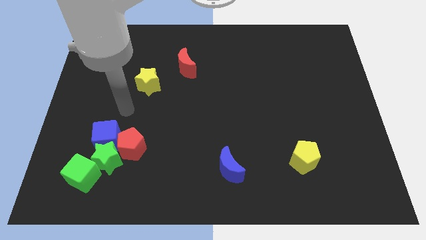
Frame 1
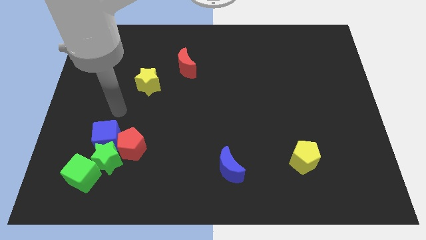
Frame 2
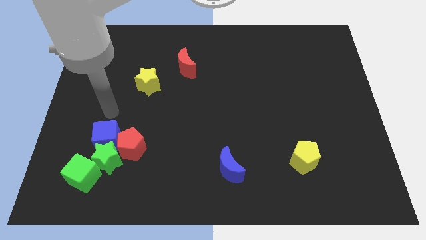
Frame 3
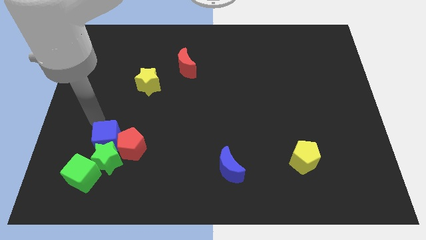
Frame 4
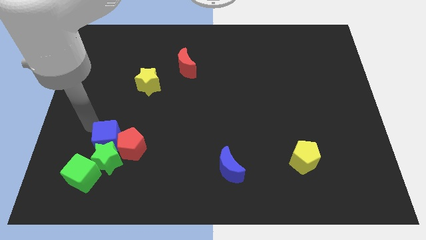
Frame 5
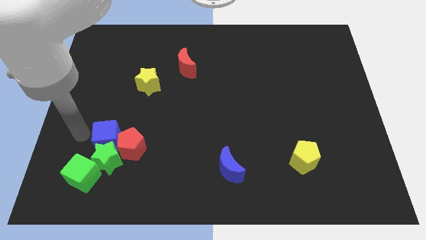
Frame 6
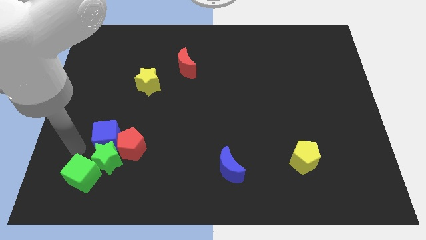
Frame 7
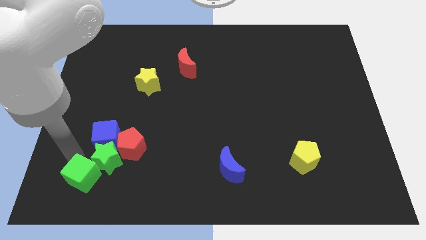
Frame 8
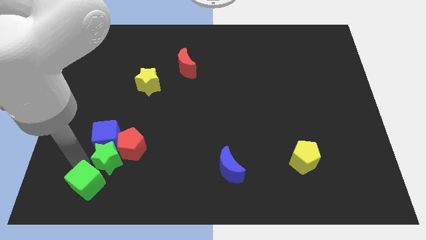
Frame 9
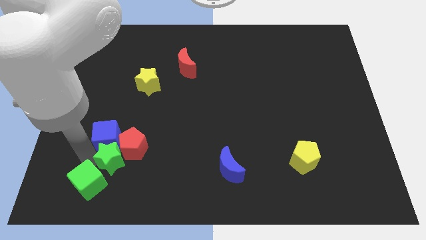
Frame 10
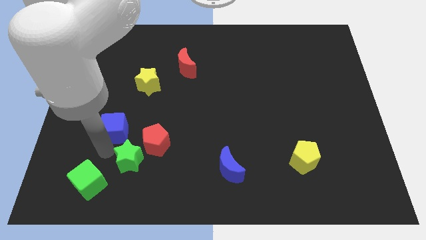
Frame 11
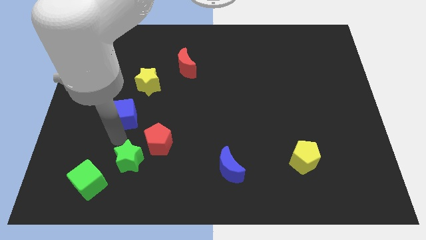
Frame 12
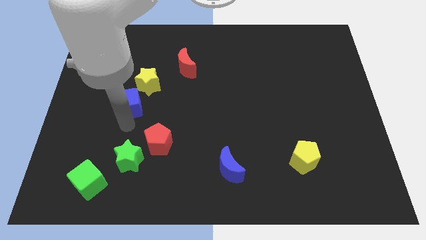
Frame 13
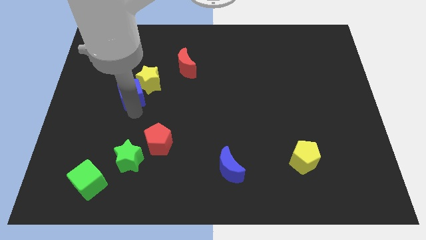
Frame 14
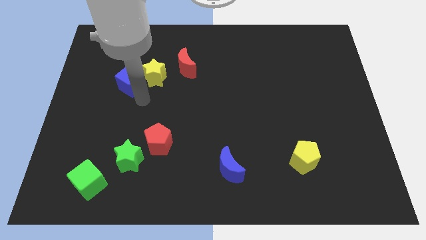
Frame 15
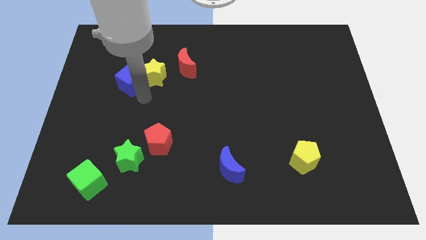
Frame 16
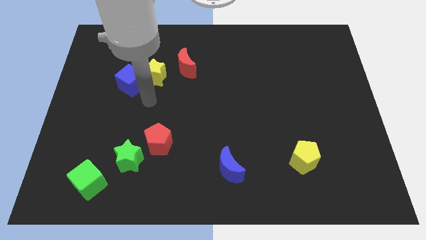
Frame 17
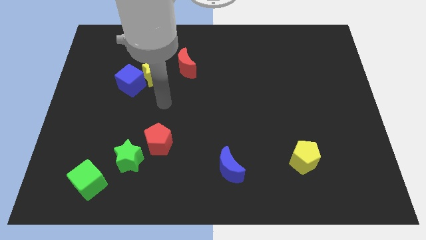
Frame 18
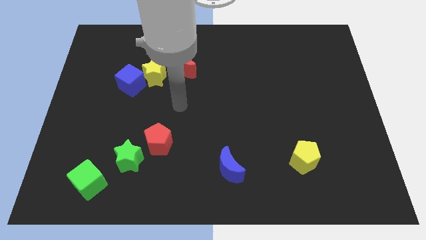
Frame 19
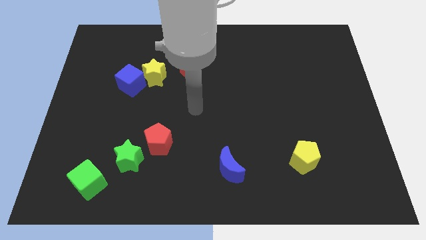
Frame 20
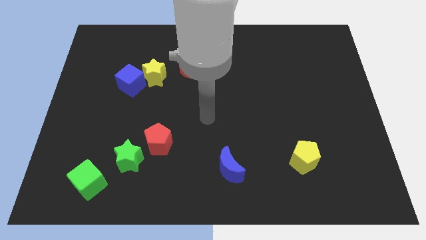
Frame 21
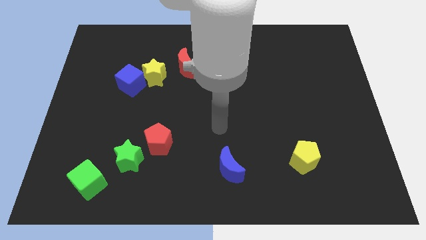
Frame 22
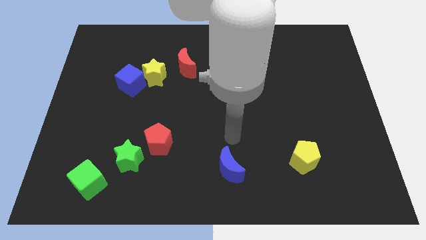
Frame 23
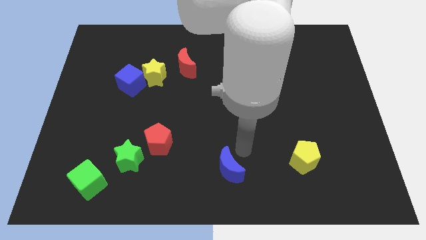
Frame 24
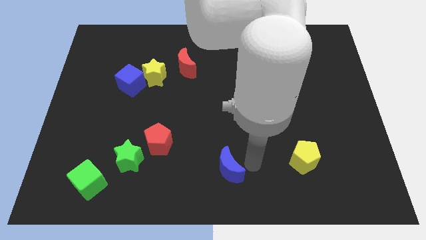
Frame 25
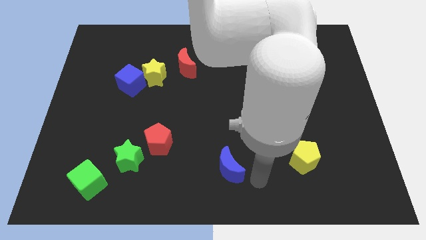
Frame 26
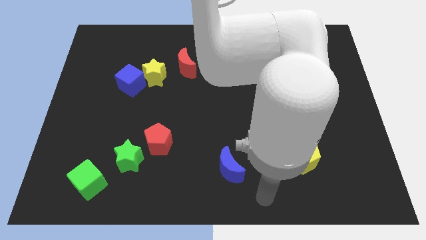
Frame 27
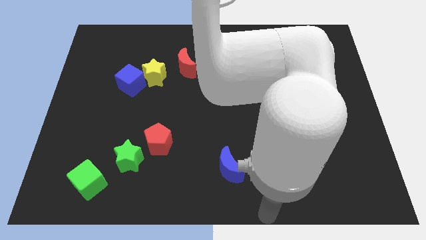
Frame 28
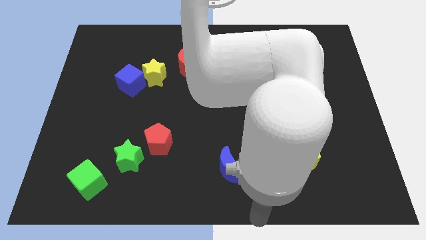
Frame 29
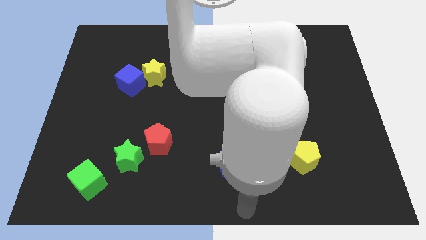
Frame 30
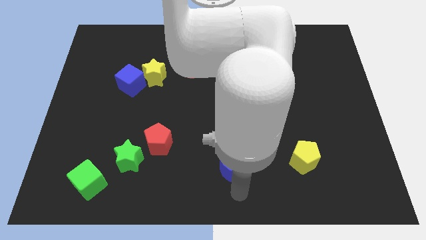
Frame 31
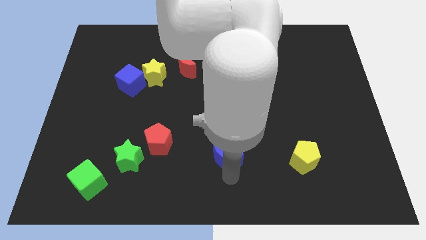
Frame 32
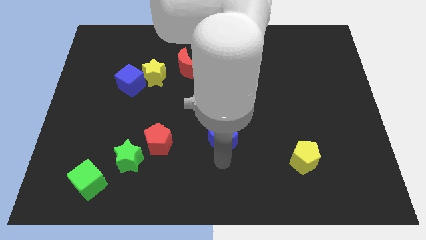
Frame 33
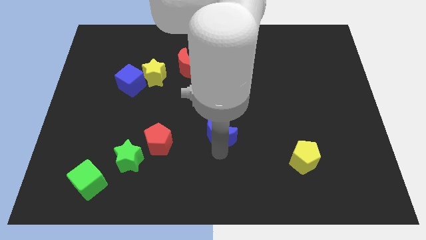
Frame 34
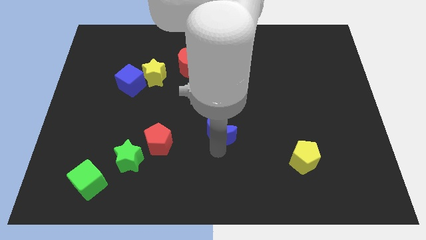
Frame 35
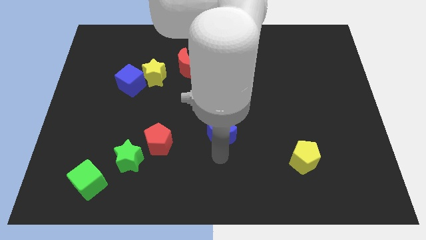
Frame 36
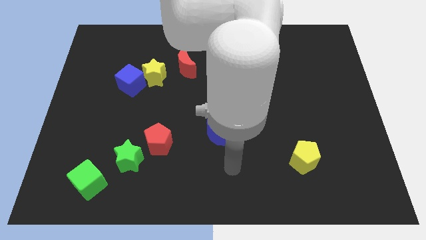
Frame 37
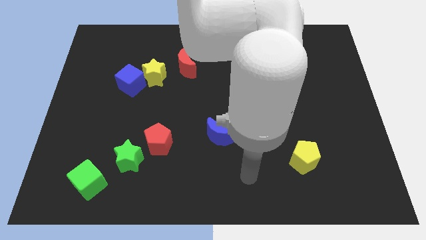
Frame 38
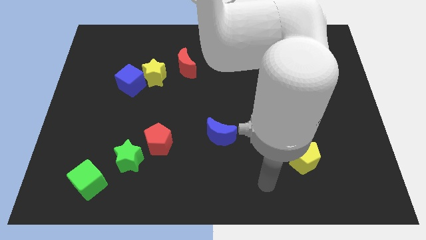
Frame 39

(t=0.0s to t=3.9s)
place the group of blocks in a diagonal line

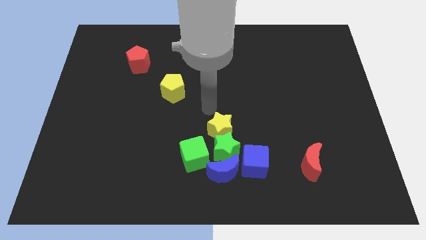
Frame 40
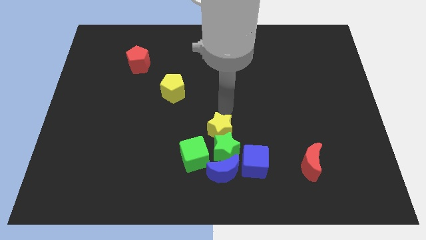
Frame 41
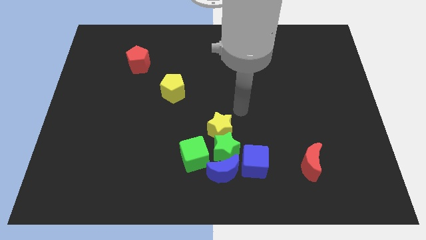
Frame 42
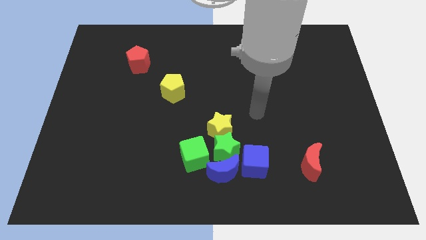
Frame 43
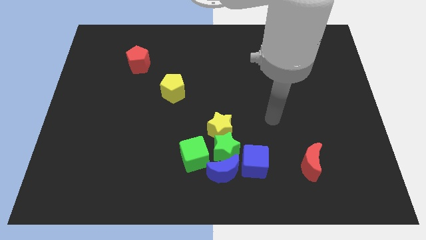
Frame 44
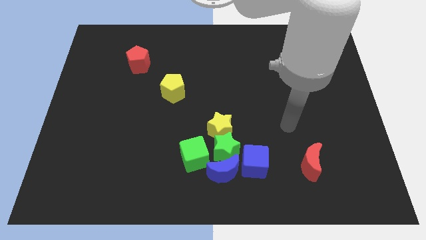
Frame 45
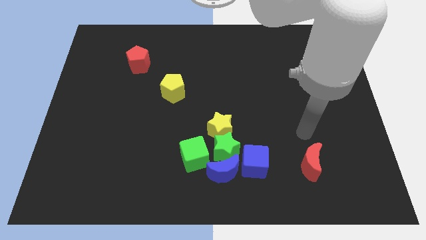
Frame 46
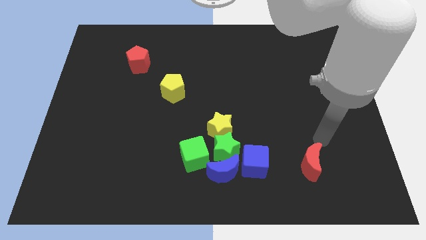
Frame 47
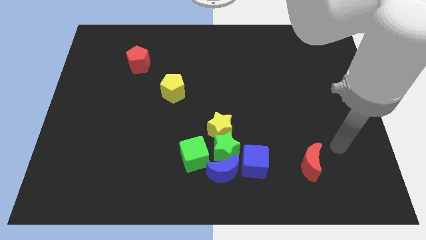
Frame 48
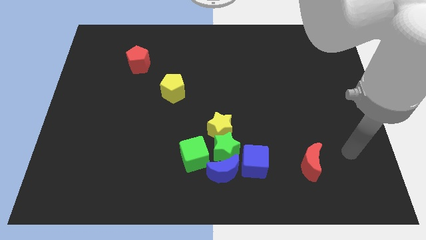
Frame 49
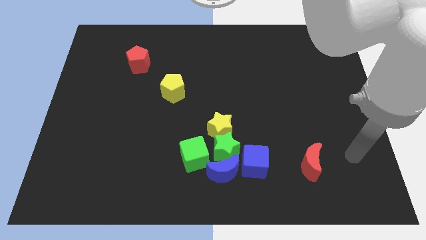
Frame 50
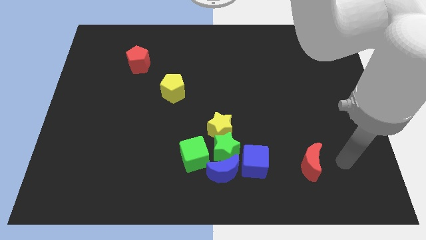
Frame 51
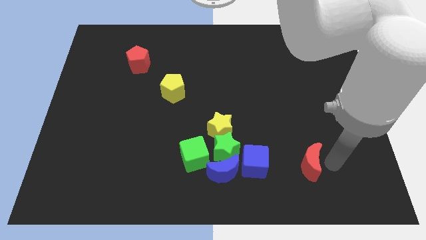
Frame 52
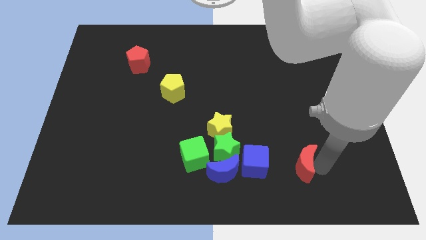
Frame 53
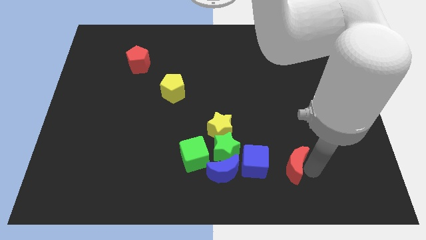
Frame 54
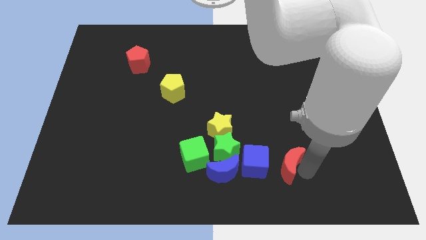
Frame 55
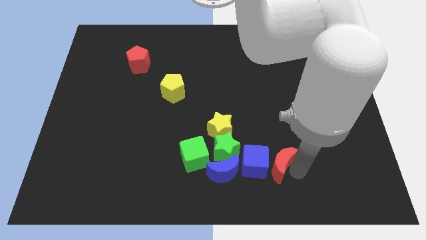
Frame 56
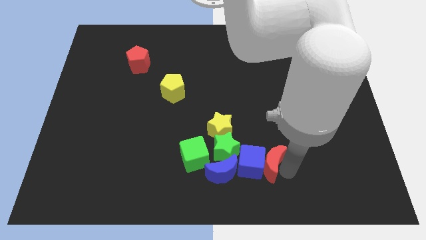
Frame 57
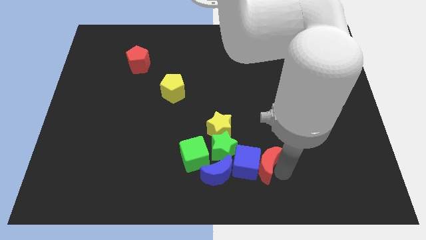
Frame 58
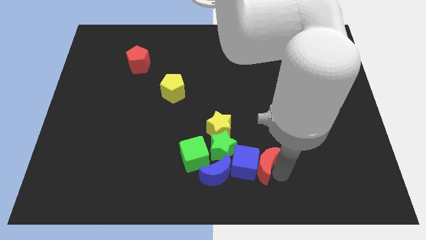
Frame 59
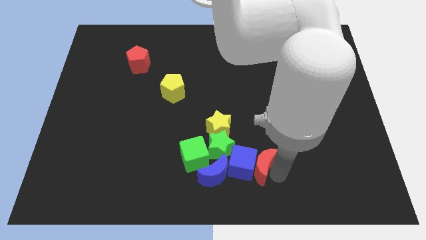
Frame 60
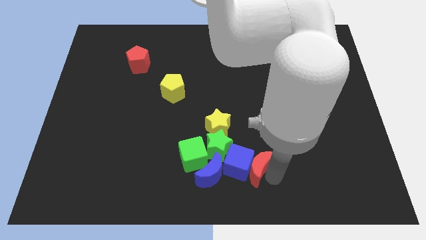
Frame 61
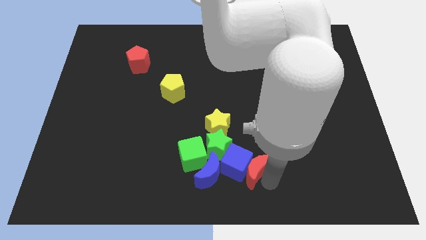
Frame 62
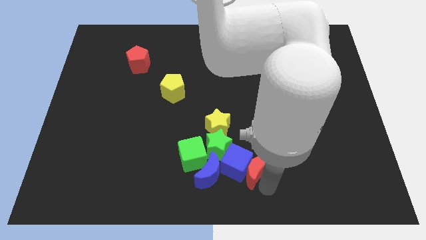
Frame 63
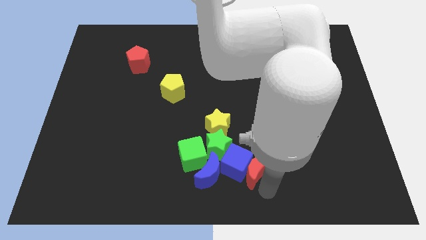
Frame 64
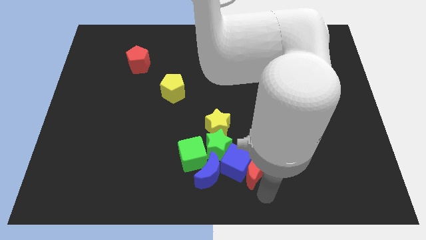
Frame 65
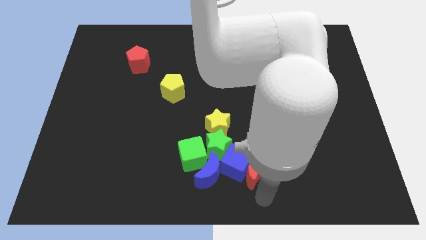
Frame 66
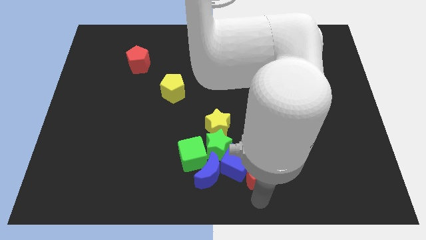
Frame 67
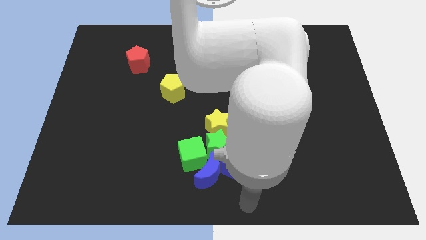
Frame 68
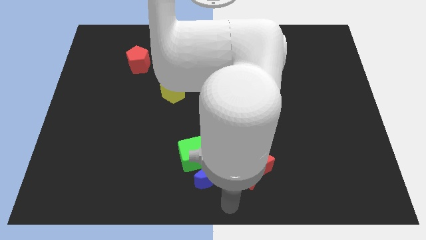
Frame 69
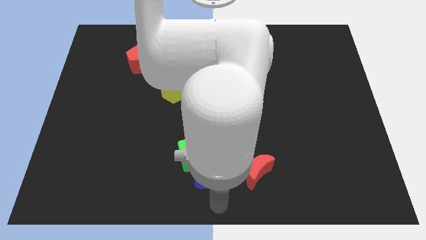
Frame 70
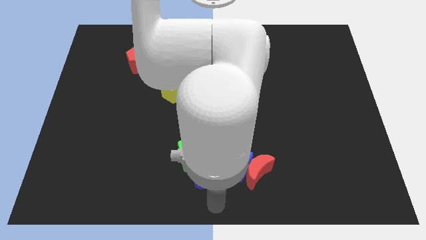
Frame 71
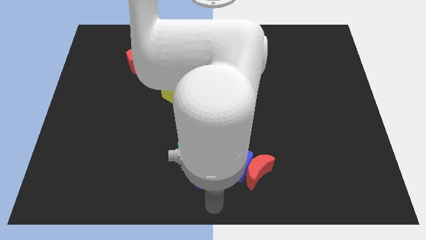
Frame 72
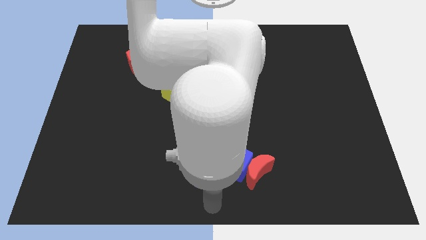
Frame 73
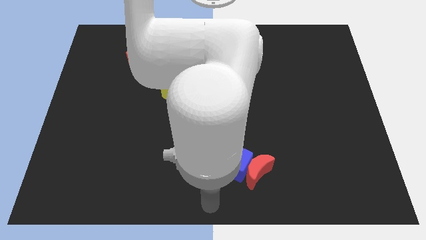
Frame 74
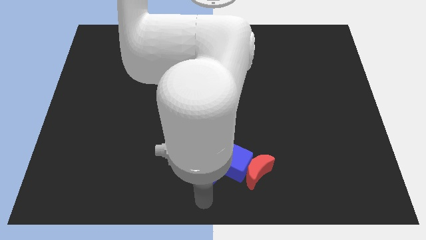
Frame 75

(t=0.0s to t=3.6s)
push the red crescent into the blue cube

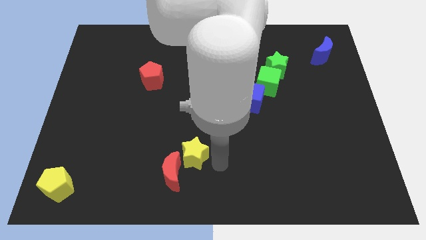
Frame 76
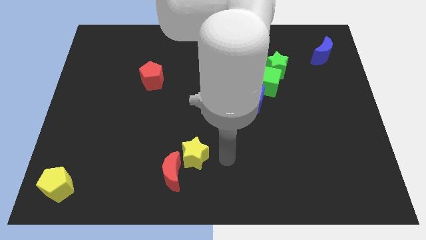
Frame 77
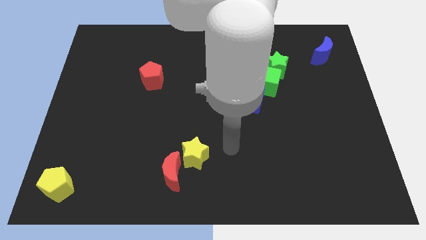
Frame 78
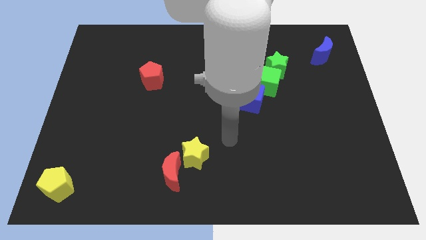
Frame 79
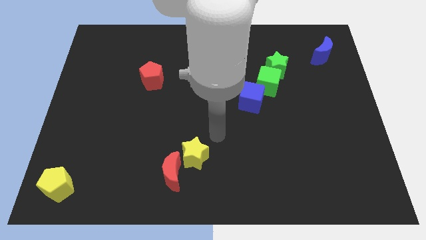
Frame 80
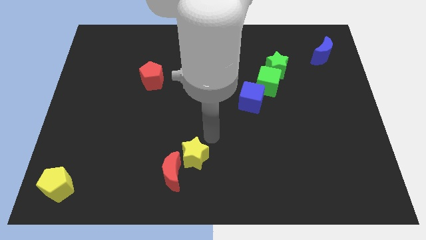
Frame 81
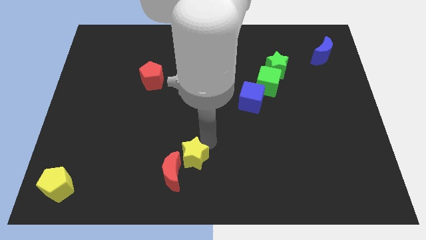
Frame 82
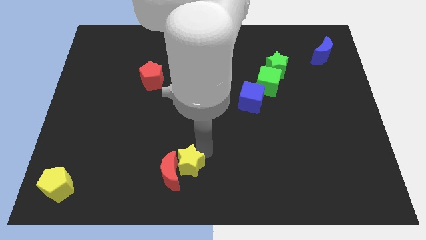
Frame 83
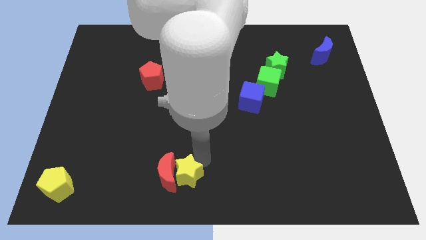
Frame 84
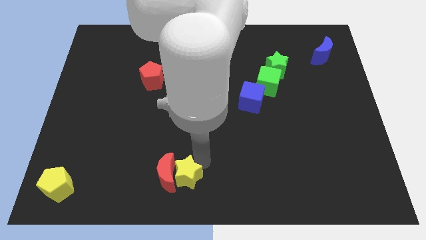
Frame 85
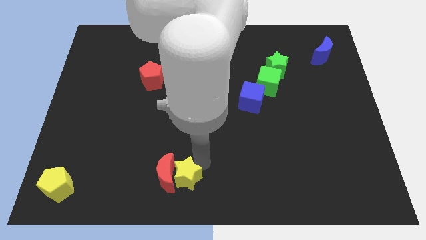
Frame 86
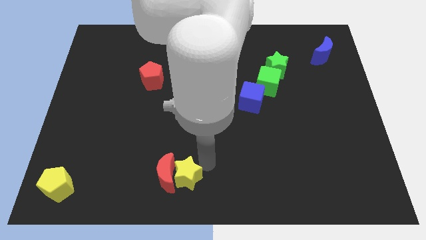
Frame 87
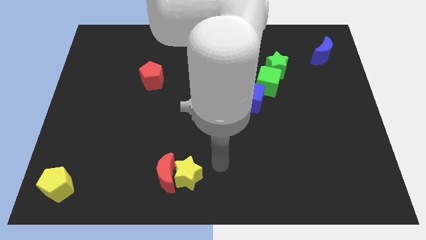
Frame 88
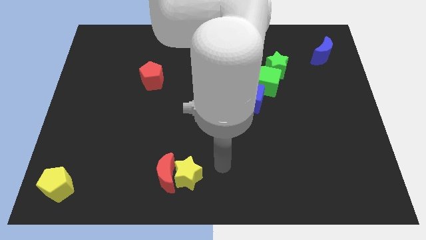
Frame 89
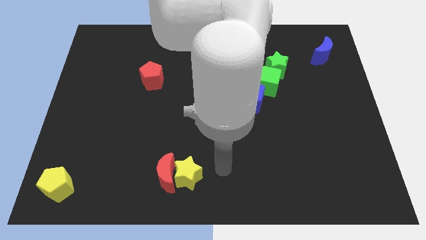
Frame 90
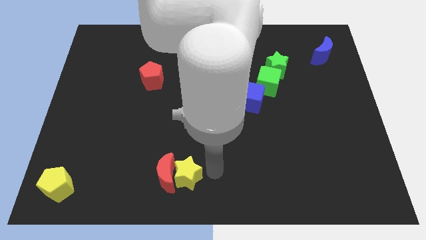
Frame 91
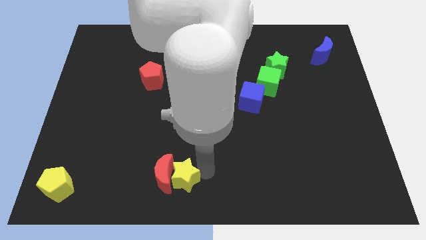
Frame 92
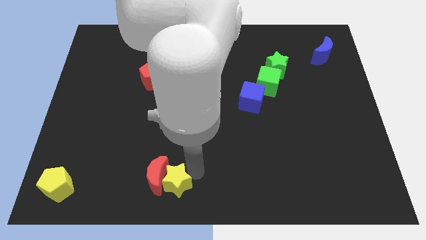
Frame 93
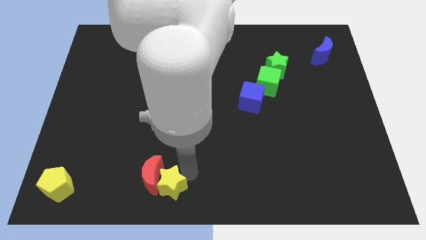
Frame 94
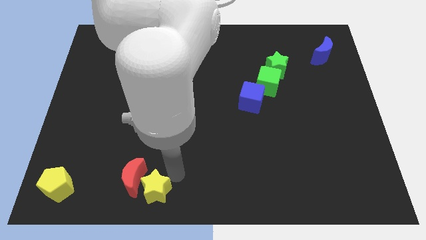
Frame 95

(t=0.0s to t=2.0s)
move the yellow star and red moon towards the right side of the yellow pentagon
